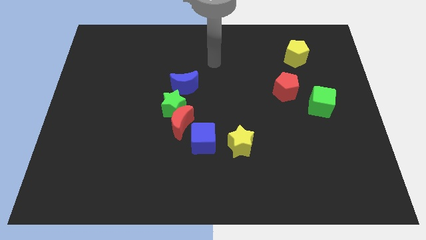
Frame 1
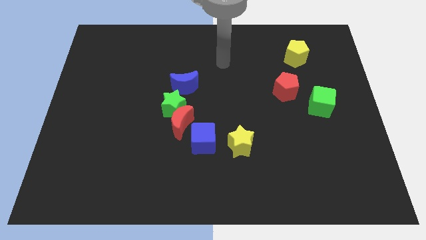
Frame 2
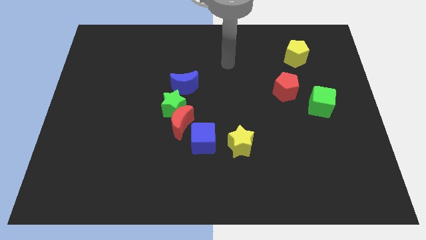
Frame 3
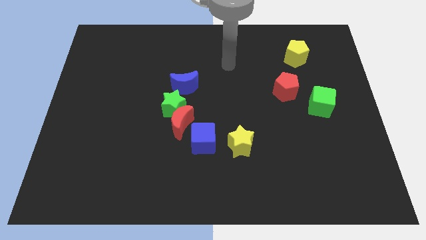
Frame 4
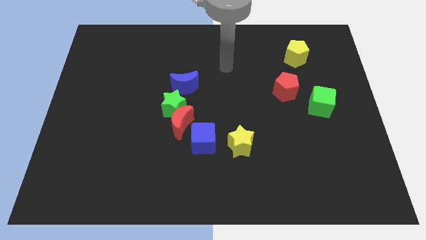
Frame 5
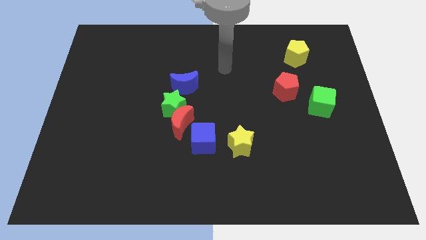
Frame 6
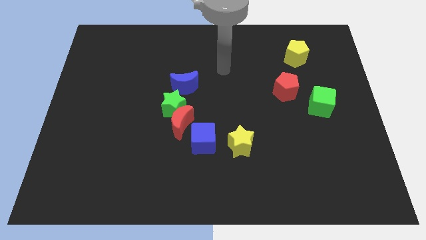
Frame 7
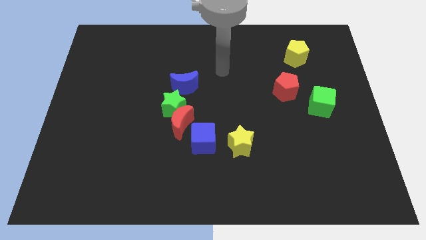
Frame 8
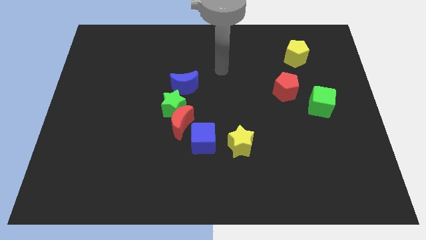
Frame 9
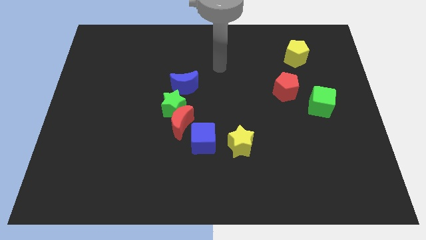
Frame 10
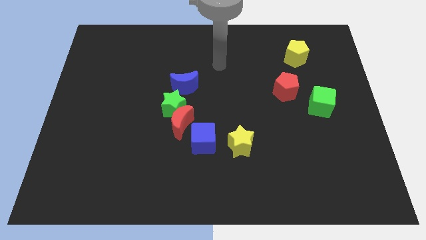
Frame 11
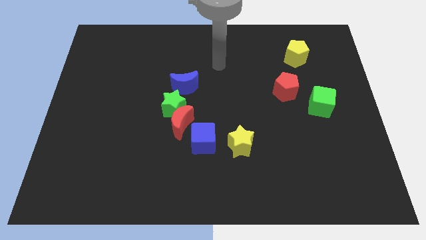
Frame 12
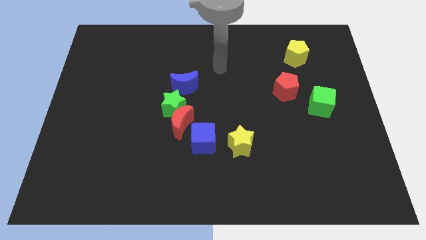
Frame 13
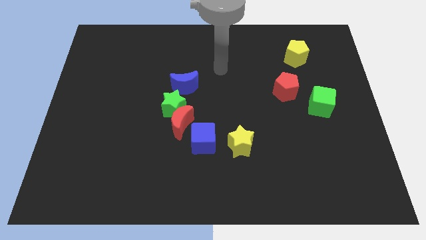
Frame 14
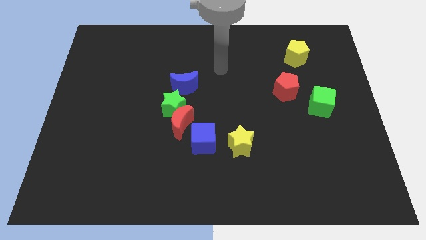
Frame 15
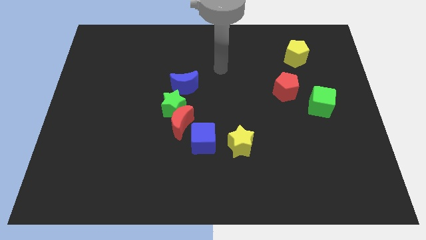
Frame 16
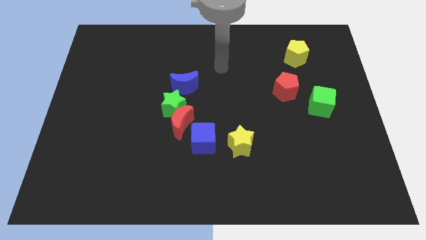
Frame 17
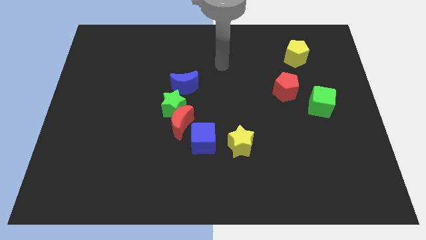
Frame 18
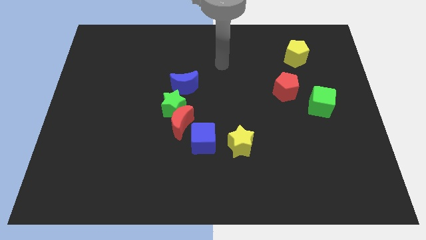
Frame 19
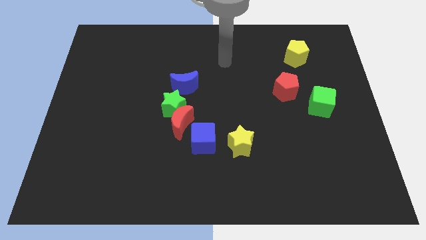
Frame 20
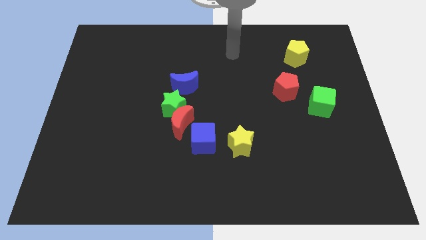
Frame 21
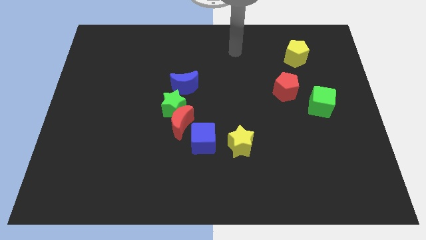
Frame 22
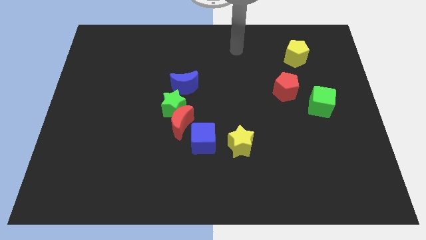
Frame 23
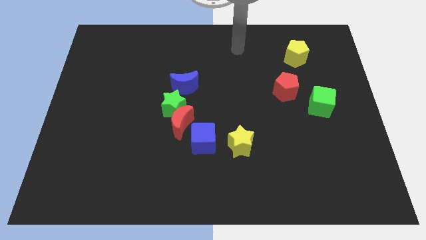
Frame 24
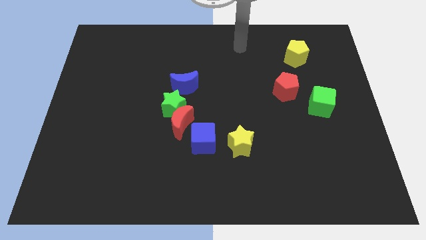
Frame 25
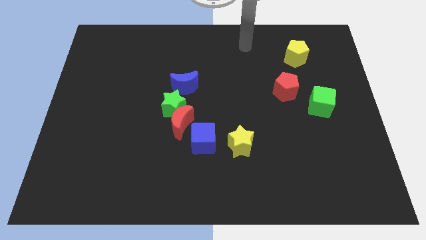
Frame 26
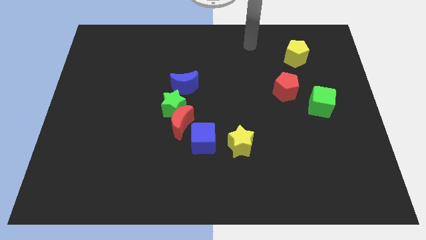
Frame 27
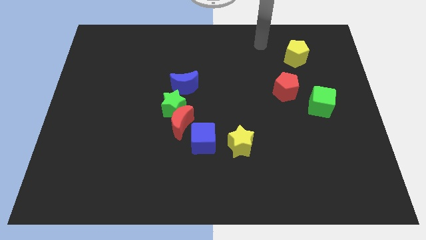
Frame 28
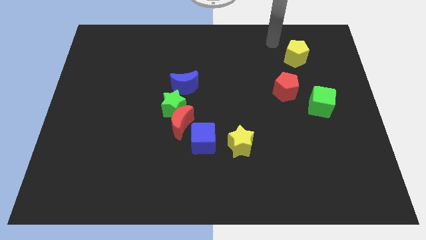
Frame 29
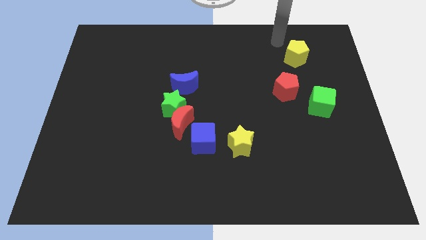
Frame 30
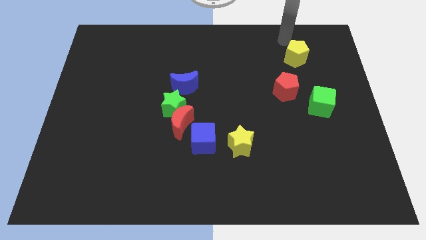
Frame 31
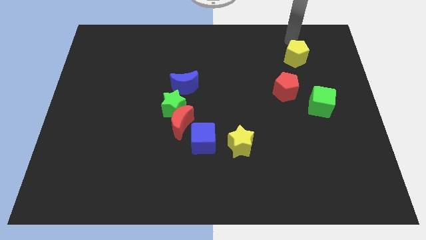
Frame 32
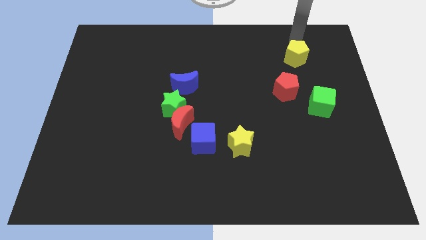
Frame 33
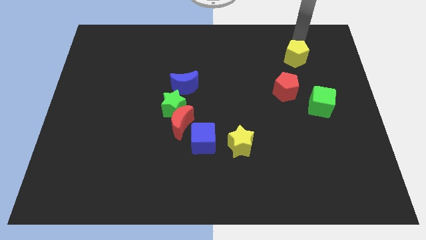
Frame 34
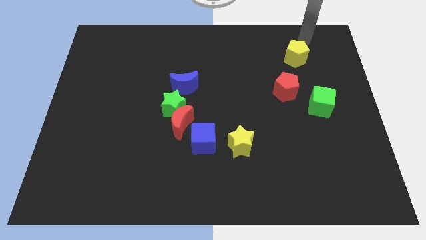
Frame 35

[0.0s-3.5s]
point your arm at the top of yellow pentagon

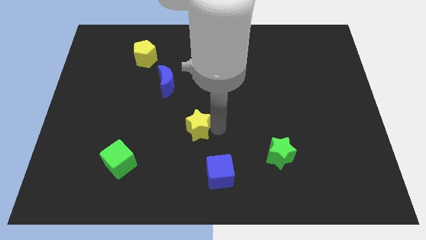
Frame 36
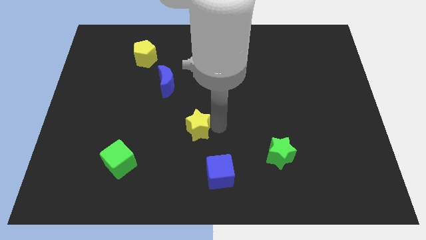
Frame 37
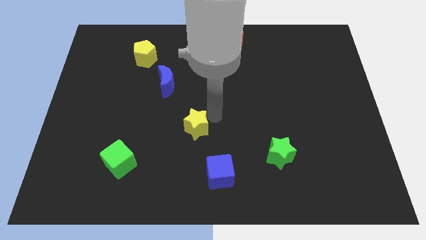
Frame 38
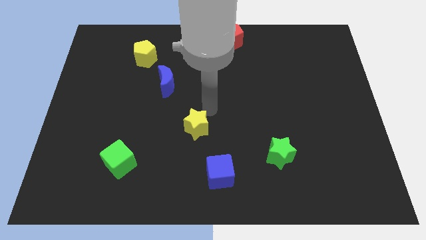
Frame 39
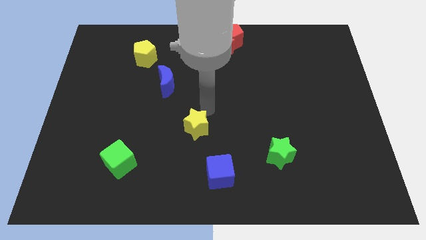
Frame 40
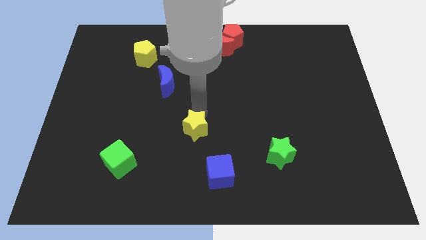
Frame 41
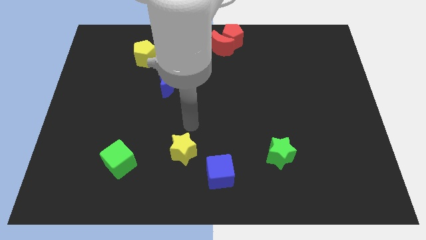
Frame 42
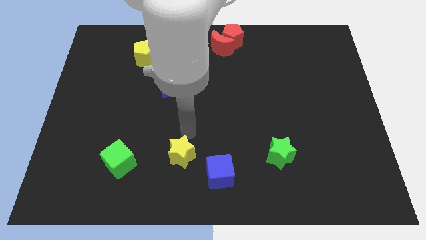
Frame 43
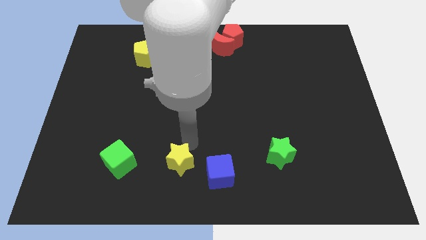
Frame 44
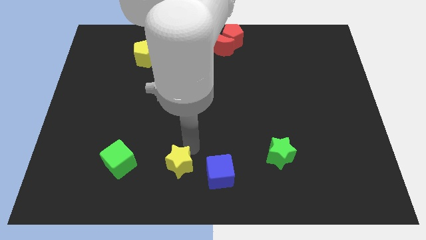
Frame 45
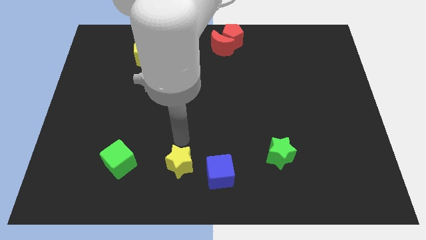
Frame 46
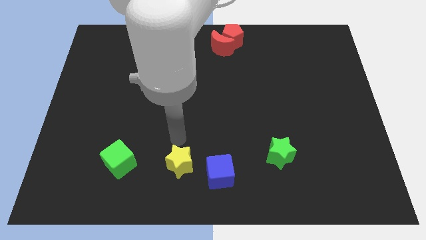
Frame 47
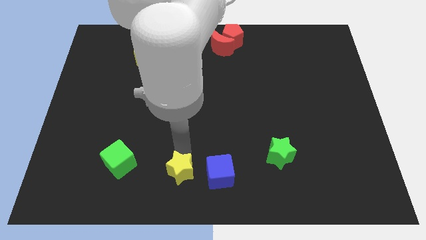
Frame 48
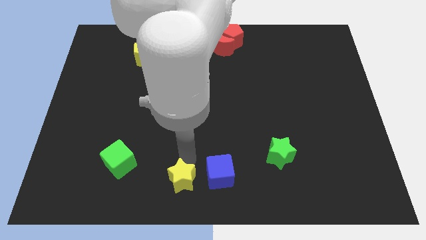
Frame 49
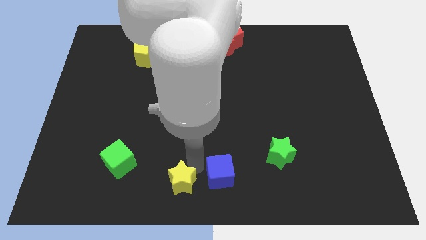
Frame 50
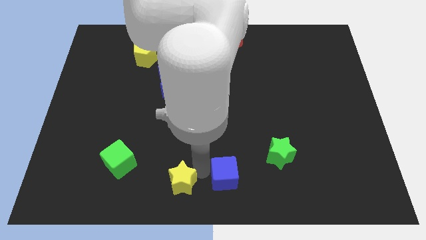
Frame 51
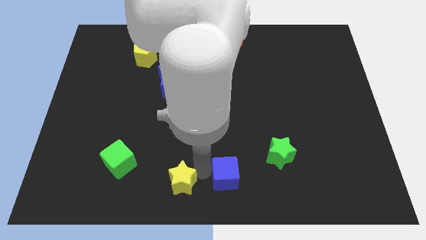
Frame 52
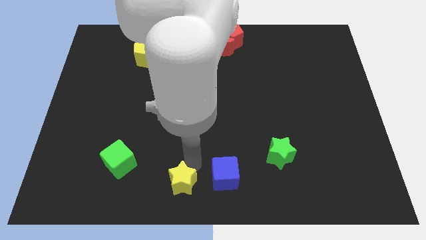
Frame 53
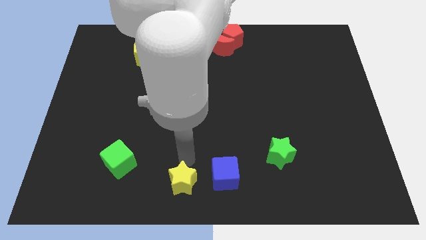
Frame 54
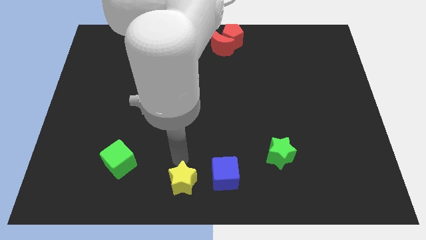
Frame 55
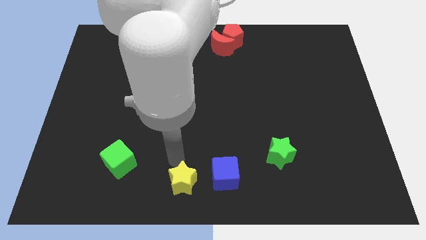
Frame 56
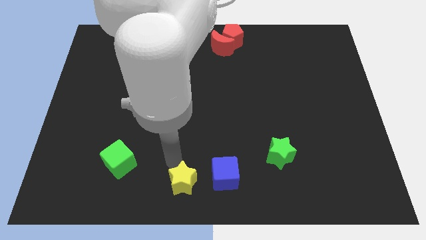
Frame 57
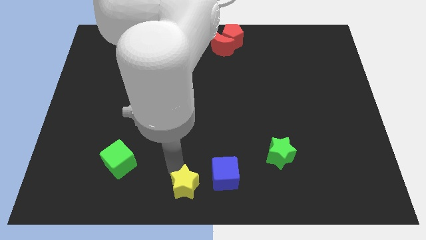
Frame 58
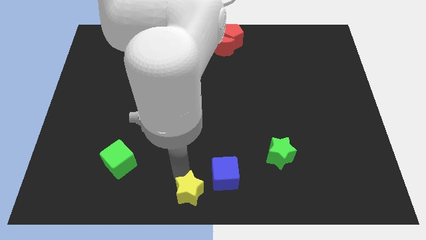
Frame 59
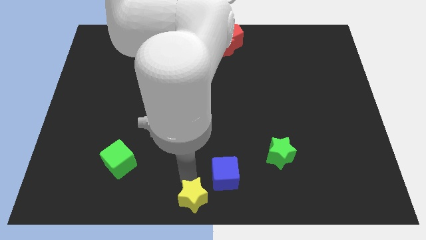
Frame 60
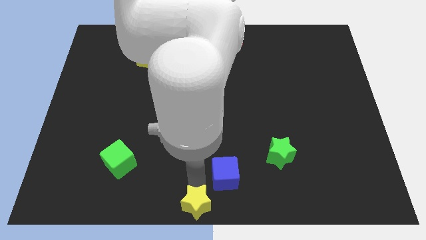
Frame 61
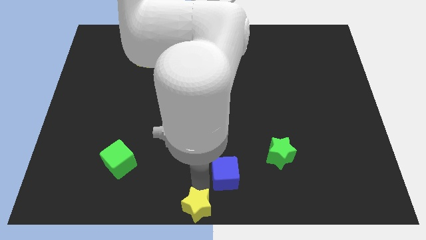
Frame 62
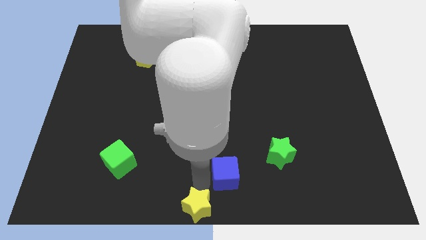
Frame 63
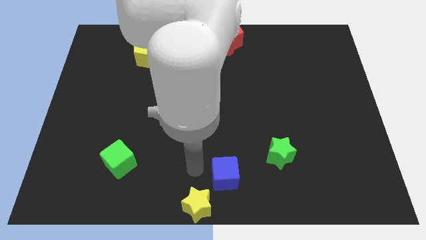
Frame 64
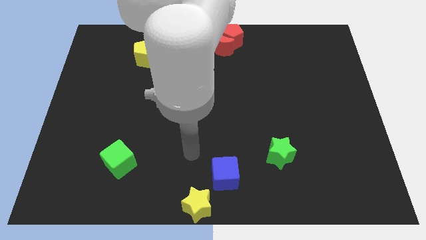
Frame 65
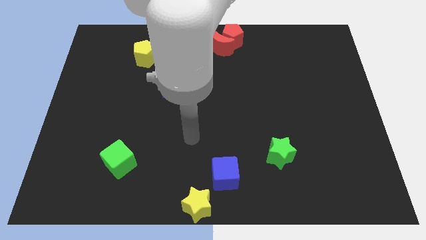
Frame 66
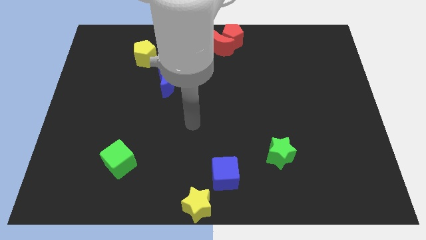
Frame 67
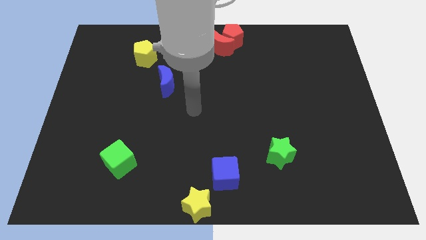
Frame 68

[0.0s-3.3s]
push the yellow star at bottom center of the board

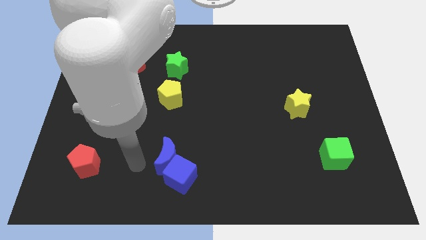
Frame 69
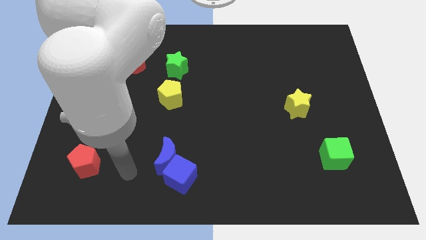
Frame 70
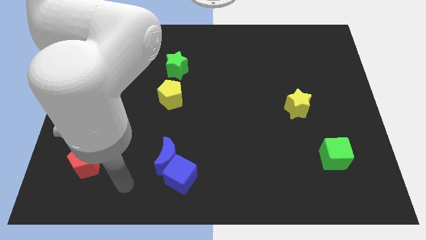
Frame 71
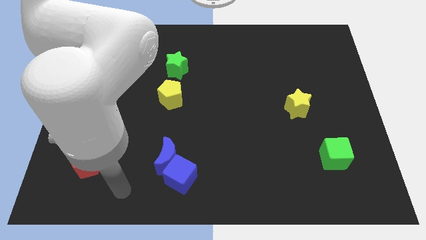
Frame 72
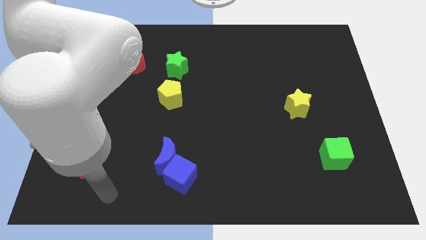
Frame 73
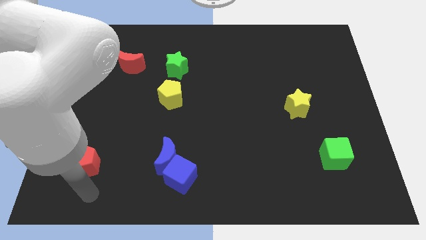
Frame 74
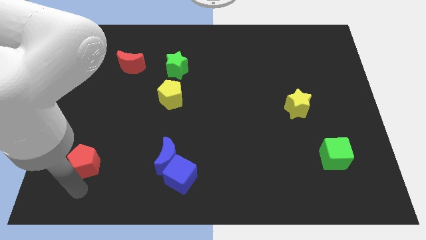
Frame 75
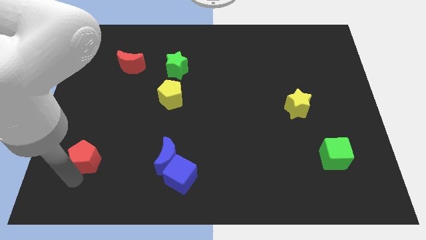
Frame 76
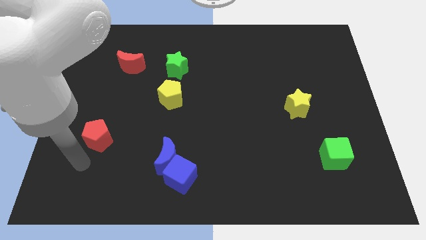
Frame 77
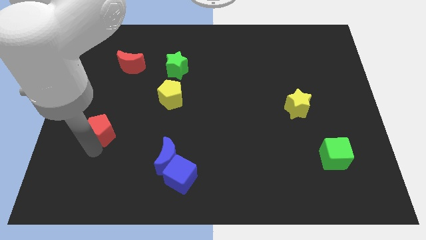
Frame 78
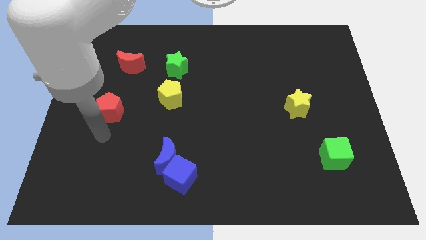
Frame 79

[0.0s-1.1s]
slide red pentagon below the red moon

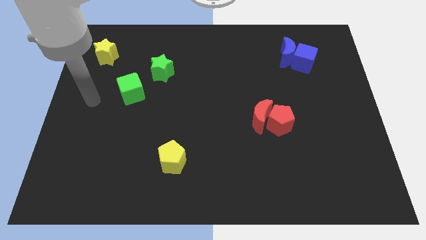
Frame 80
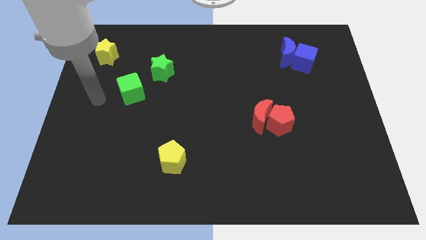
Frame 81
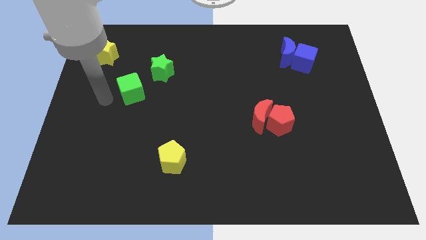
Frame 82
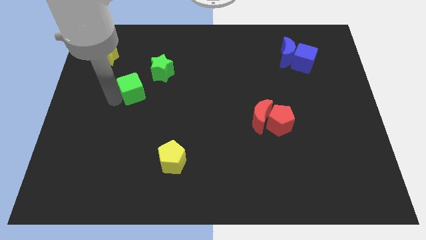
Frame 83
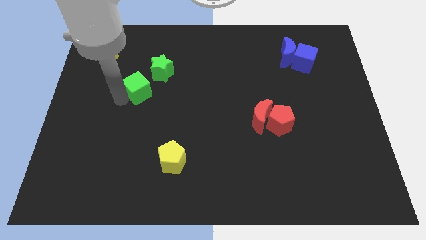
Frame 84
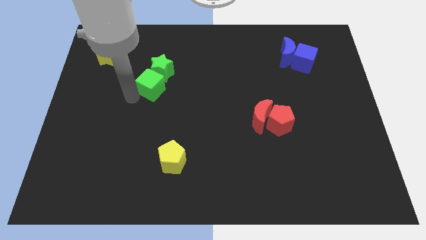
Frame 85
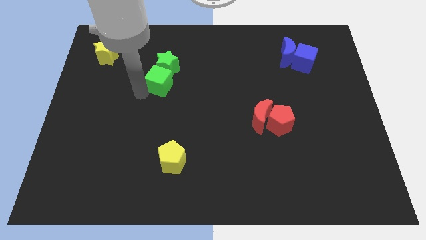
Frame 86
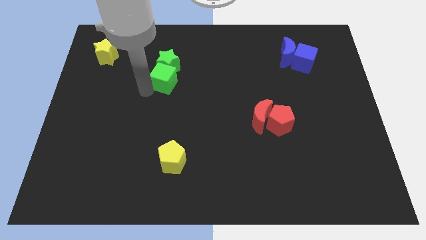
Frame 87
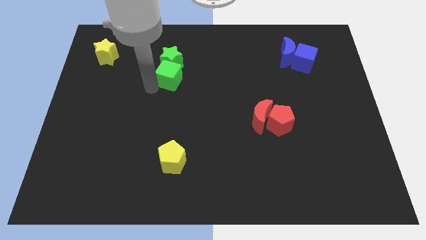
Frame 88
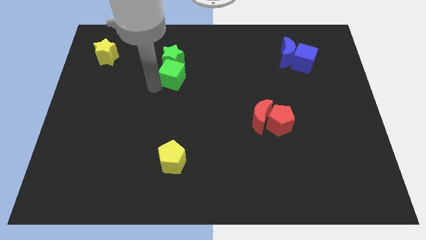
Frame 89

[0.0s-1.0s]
move the green cube to the green star

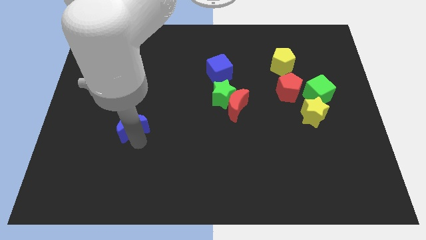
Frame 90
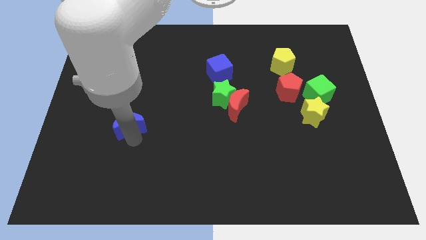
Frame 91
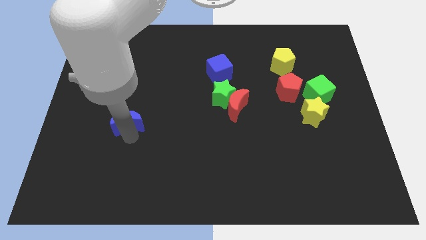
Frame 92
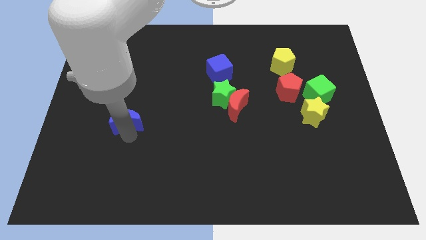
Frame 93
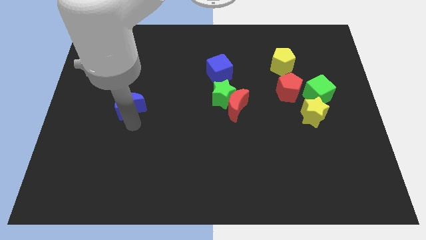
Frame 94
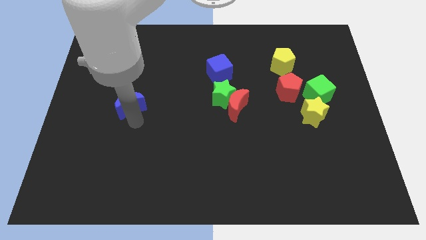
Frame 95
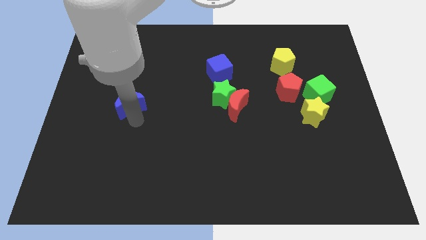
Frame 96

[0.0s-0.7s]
move the blue cube to the top of the board
